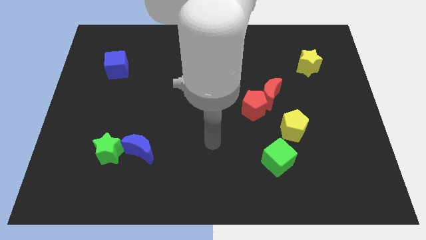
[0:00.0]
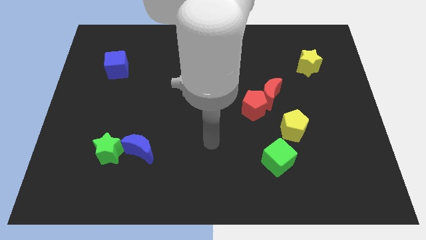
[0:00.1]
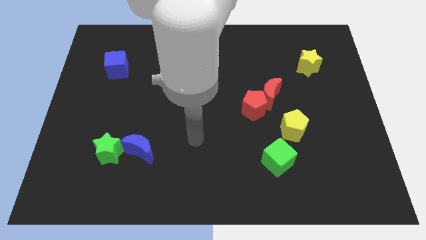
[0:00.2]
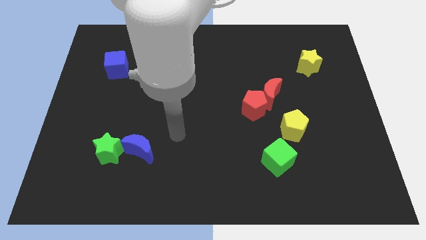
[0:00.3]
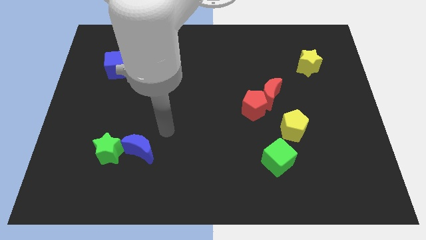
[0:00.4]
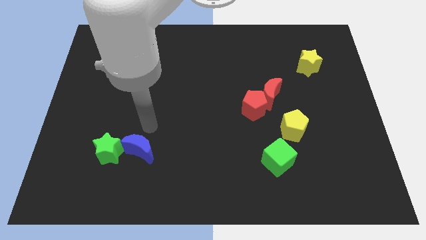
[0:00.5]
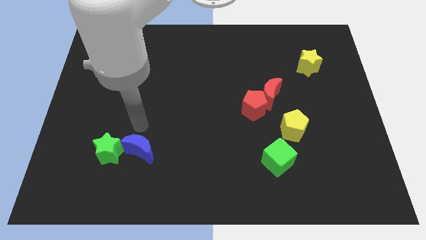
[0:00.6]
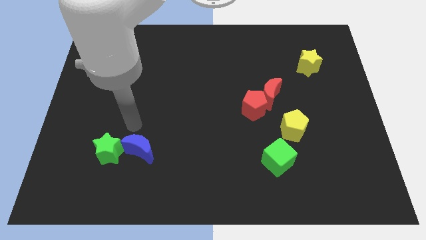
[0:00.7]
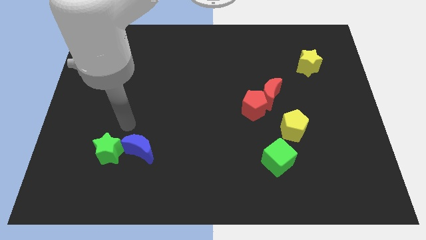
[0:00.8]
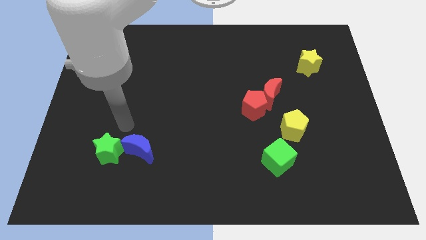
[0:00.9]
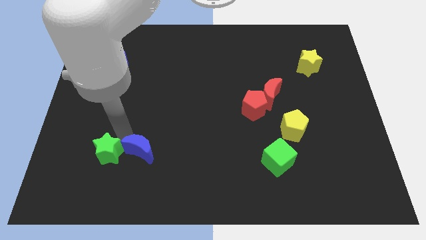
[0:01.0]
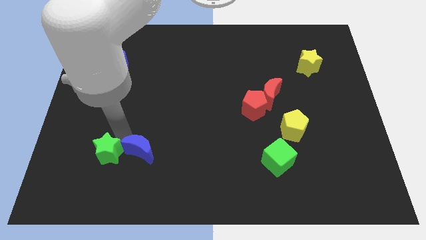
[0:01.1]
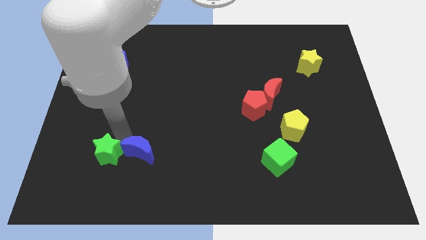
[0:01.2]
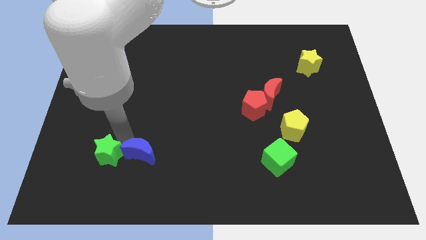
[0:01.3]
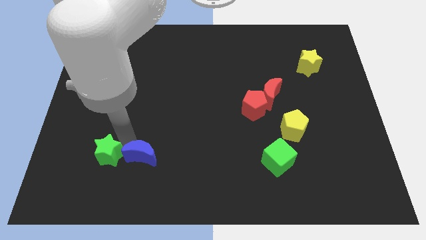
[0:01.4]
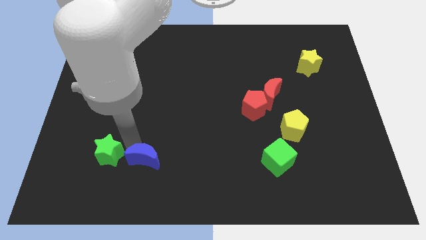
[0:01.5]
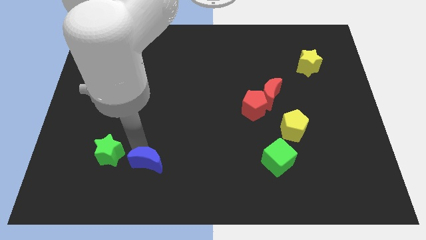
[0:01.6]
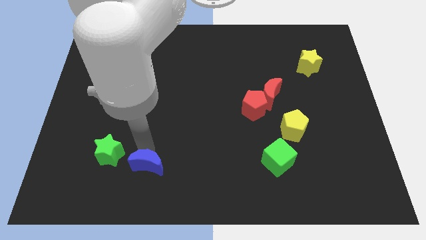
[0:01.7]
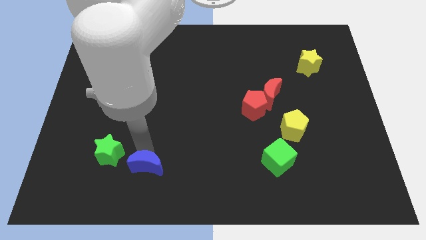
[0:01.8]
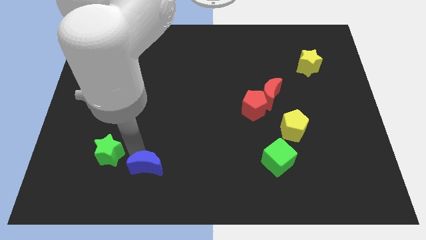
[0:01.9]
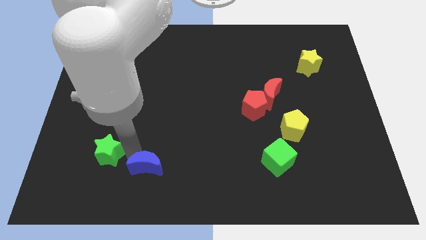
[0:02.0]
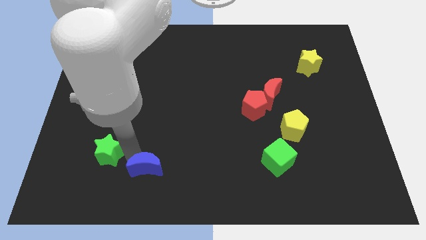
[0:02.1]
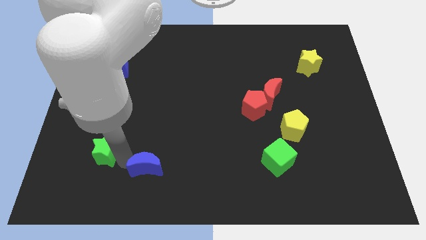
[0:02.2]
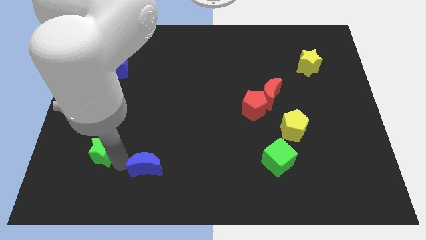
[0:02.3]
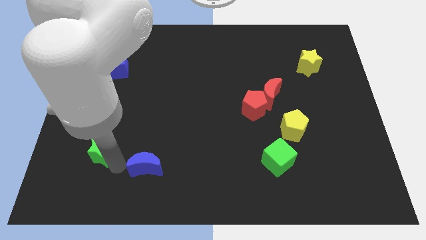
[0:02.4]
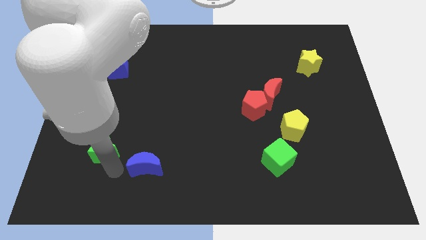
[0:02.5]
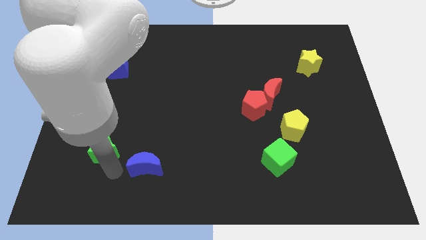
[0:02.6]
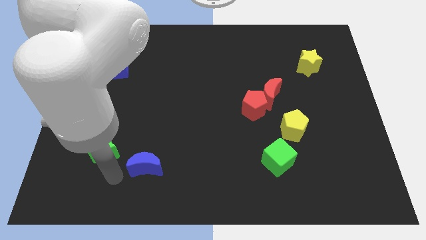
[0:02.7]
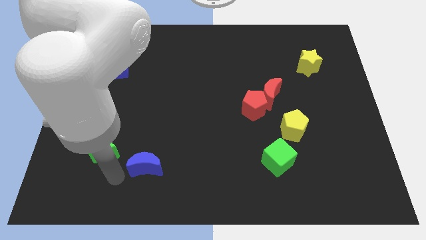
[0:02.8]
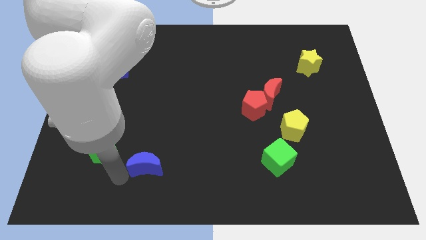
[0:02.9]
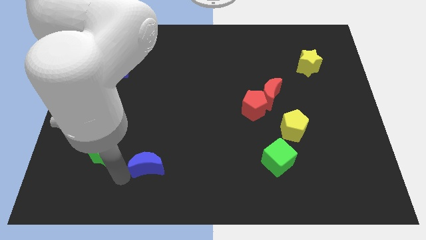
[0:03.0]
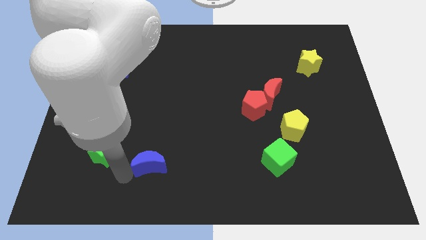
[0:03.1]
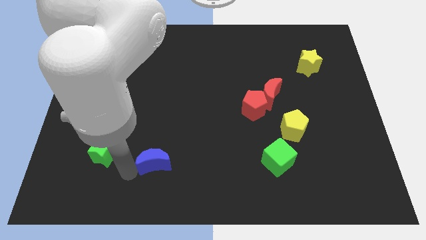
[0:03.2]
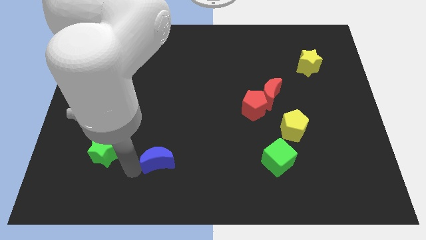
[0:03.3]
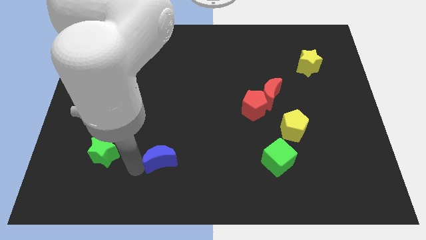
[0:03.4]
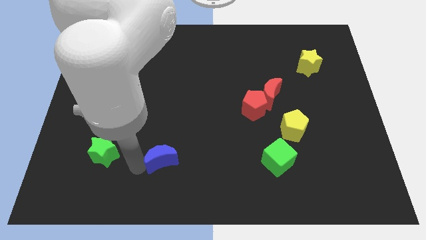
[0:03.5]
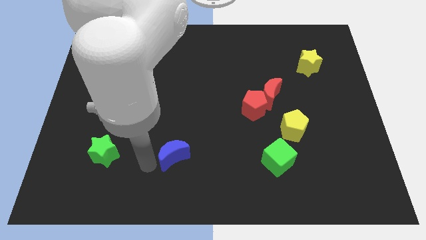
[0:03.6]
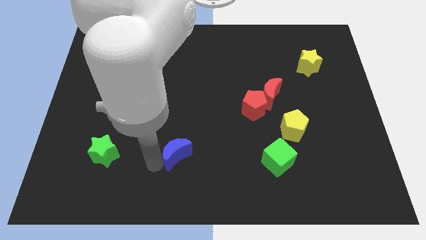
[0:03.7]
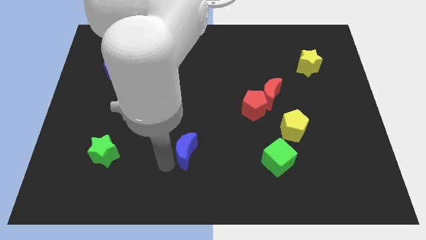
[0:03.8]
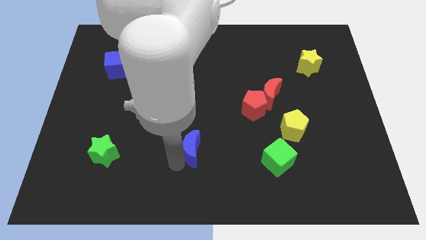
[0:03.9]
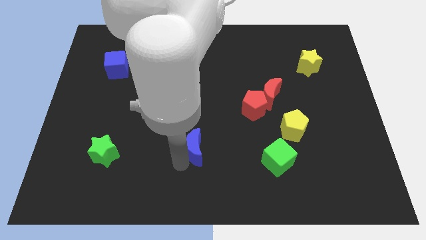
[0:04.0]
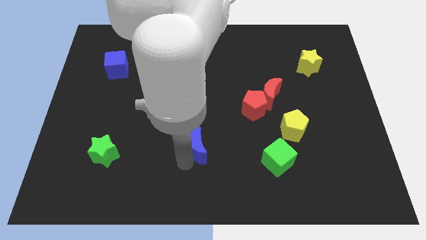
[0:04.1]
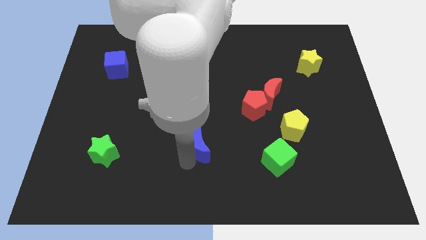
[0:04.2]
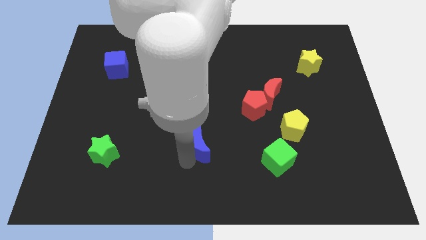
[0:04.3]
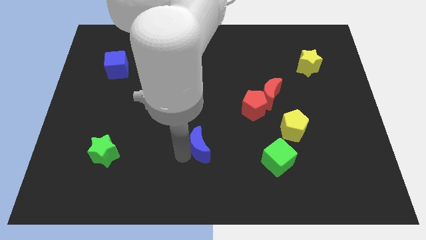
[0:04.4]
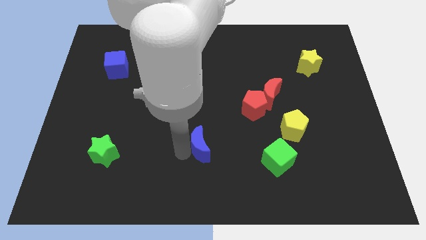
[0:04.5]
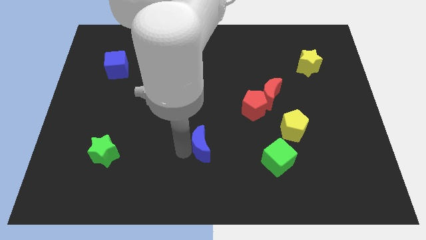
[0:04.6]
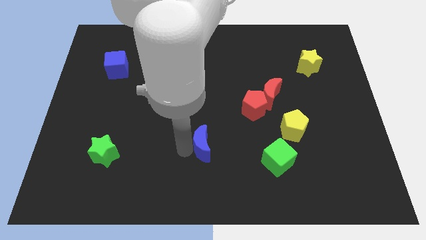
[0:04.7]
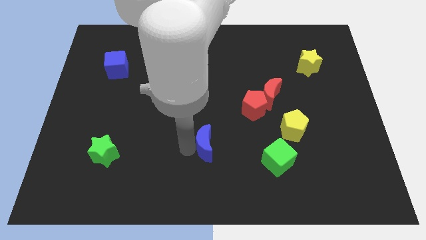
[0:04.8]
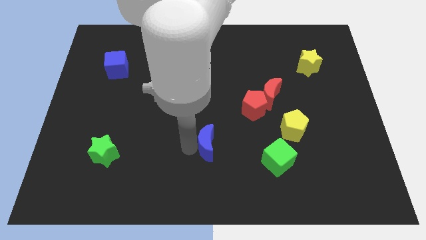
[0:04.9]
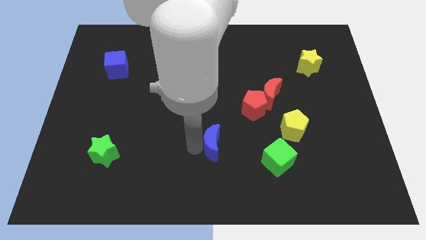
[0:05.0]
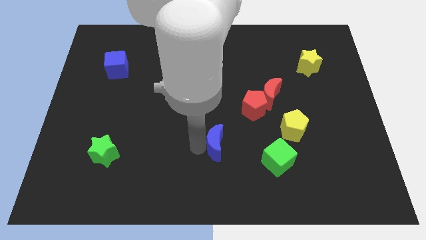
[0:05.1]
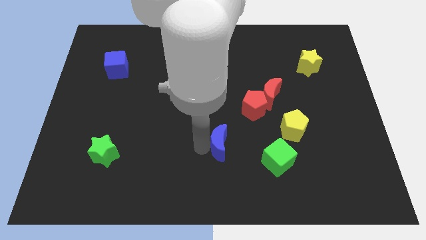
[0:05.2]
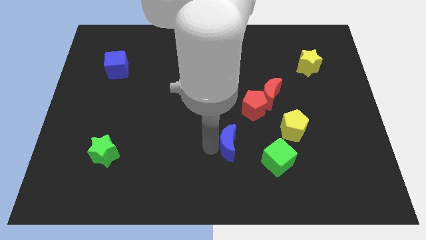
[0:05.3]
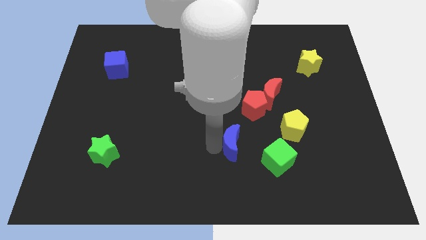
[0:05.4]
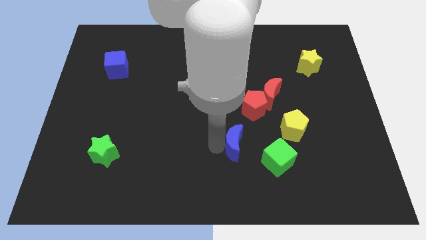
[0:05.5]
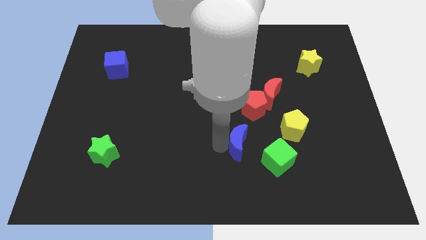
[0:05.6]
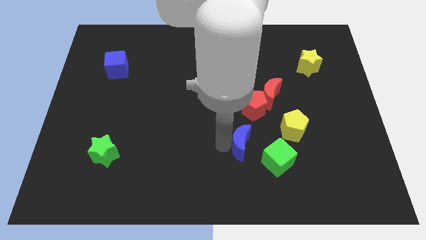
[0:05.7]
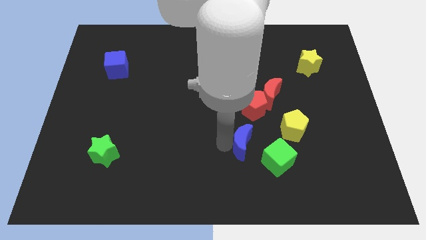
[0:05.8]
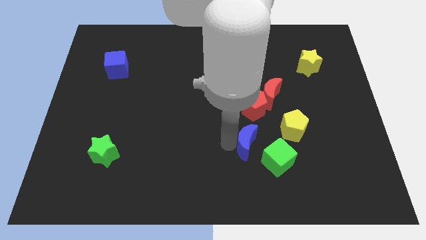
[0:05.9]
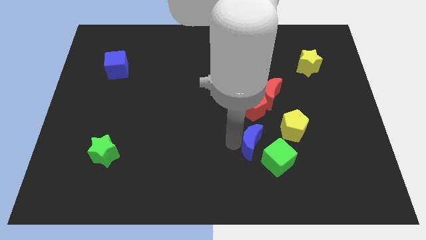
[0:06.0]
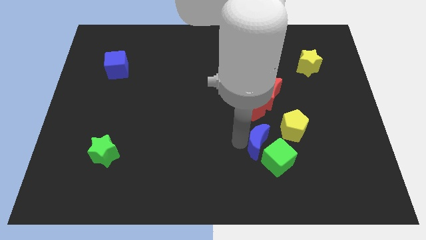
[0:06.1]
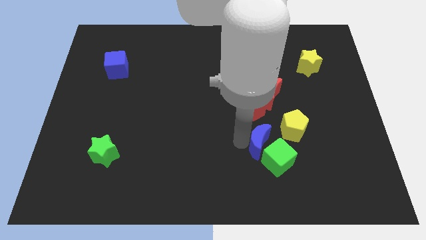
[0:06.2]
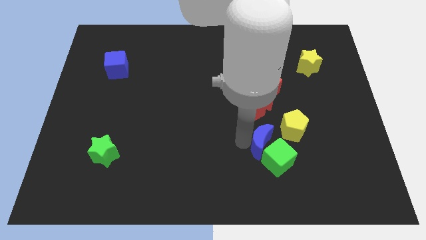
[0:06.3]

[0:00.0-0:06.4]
move the blue moon towards the green cube

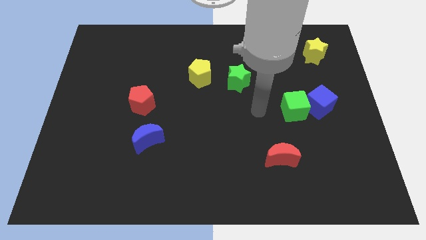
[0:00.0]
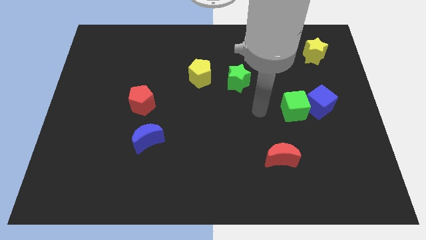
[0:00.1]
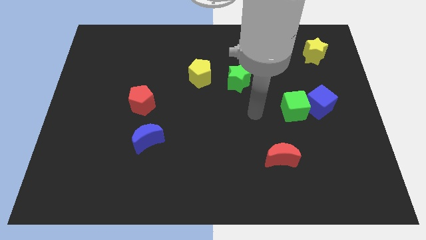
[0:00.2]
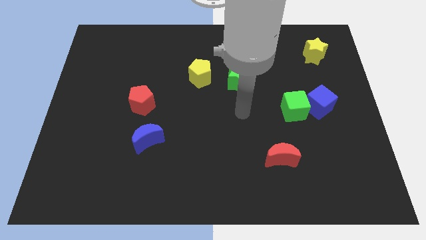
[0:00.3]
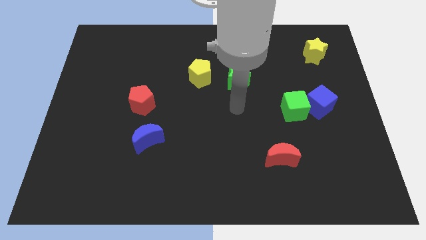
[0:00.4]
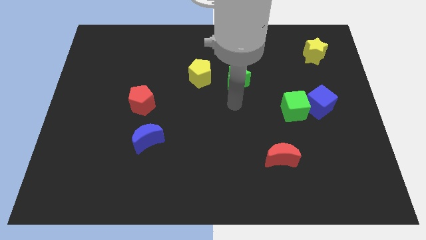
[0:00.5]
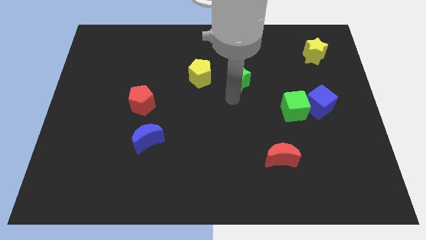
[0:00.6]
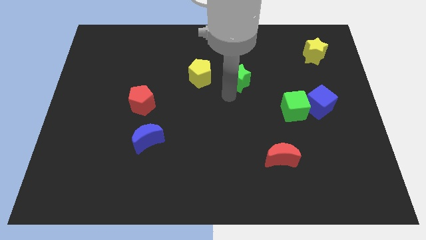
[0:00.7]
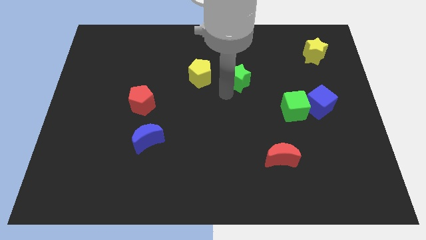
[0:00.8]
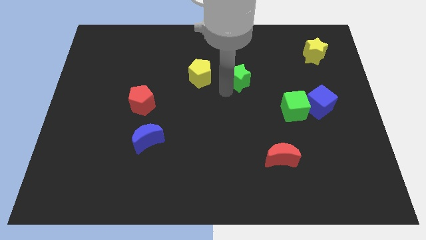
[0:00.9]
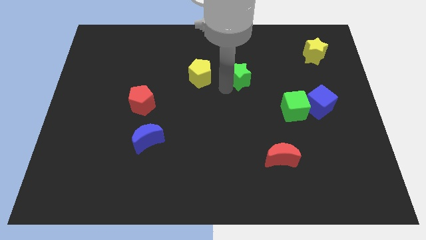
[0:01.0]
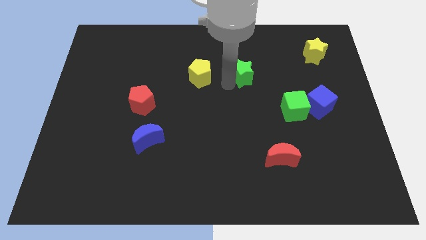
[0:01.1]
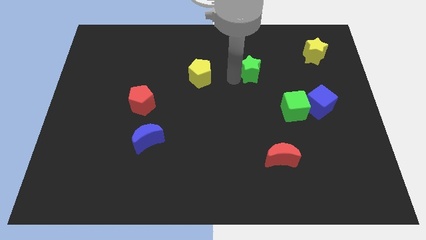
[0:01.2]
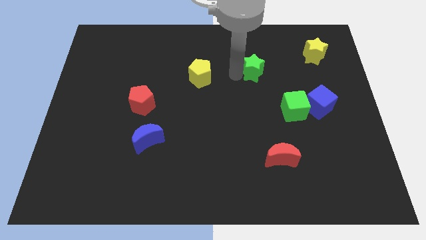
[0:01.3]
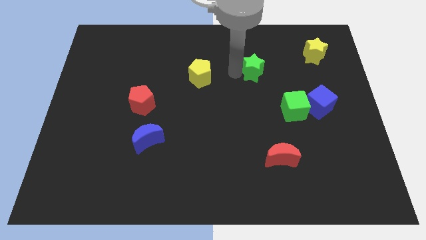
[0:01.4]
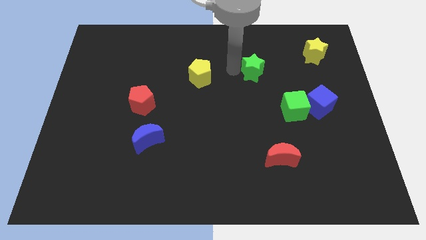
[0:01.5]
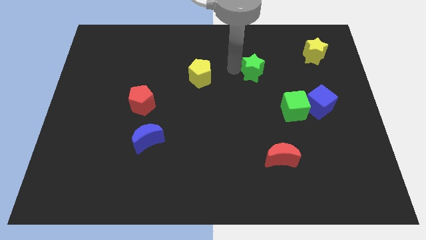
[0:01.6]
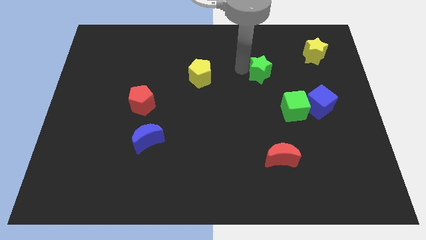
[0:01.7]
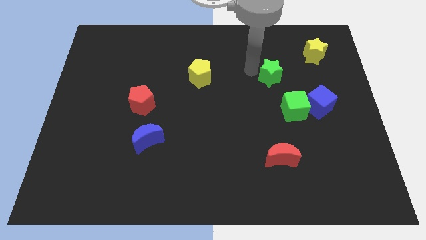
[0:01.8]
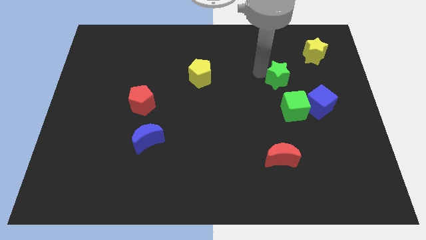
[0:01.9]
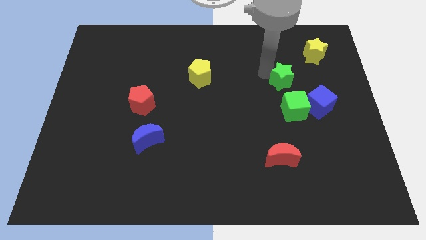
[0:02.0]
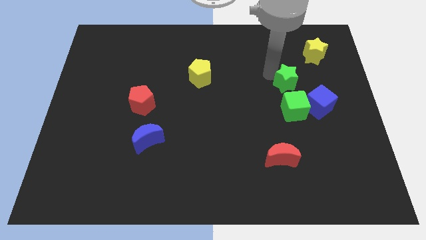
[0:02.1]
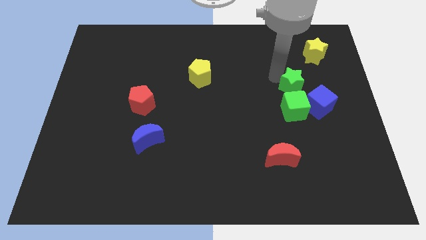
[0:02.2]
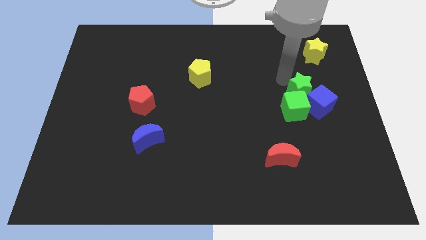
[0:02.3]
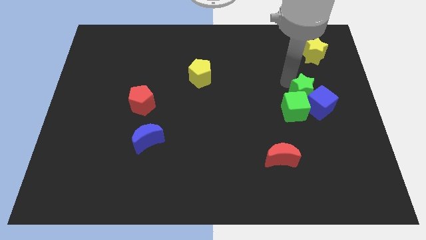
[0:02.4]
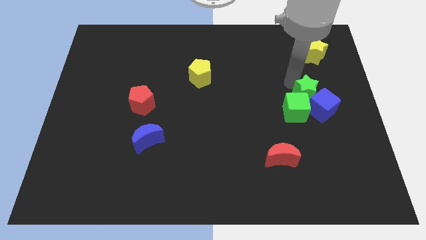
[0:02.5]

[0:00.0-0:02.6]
move the green star next to the blue cube
